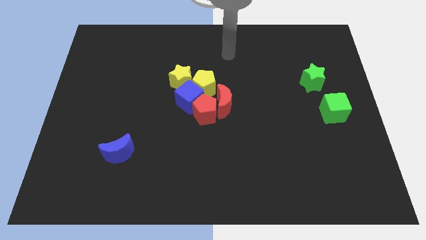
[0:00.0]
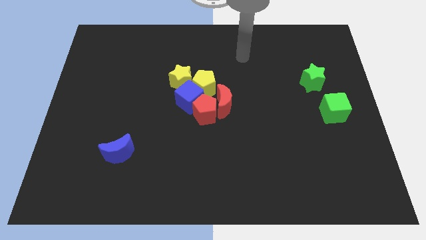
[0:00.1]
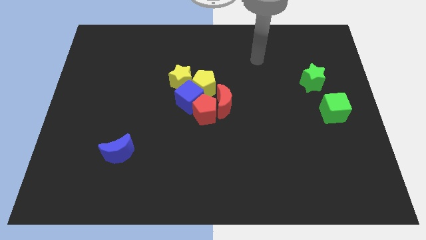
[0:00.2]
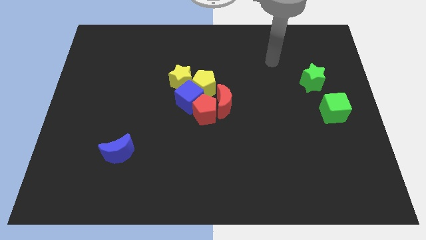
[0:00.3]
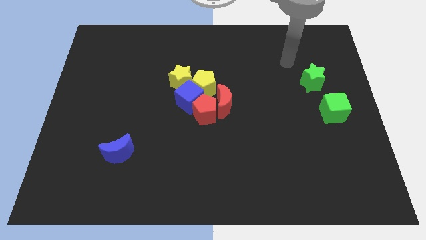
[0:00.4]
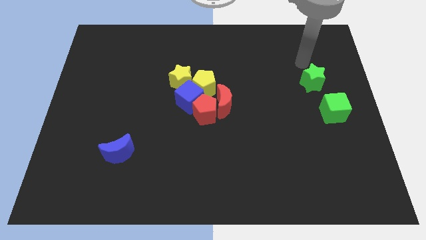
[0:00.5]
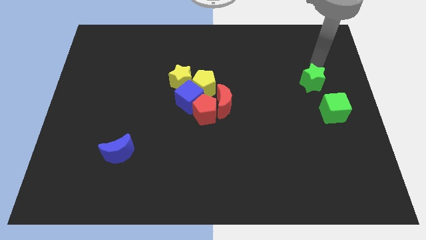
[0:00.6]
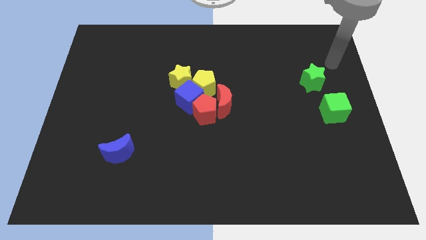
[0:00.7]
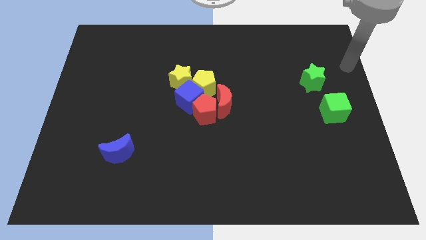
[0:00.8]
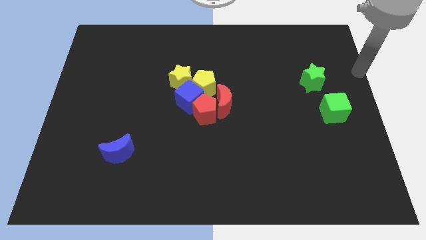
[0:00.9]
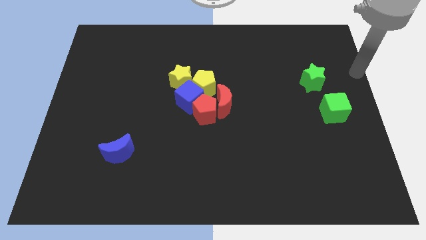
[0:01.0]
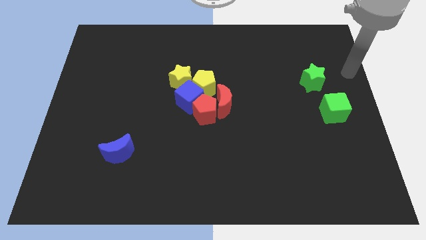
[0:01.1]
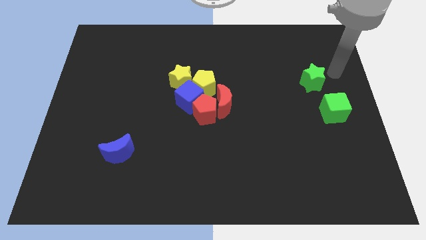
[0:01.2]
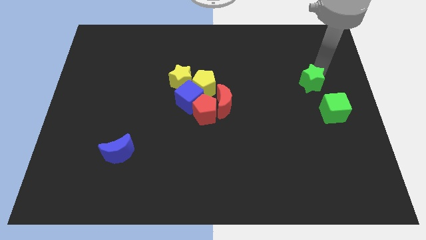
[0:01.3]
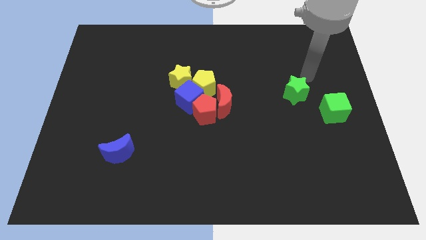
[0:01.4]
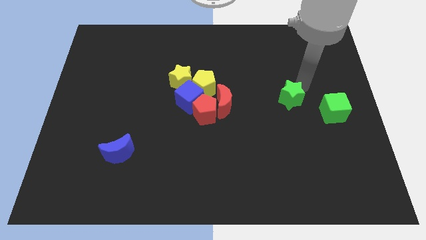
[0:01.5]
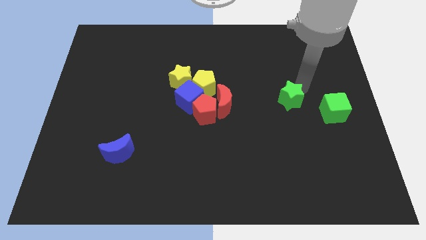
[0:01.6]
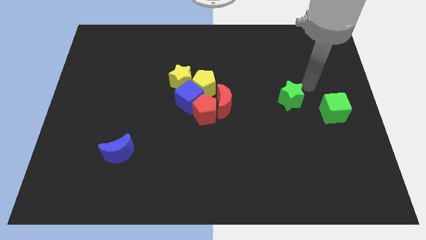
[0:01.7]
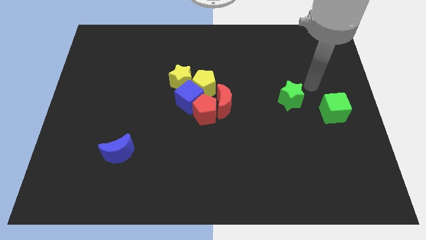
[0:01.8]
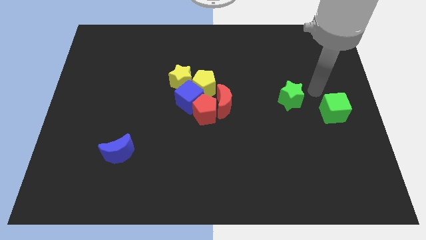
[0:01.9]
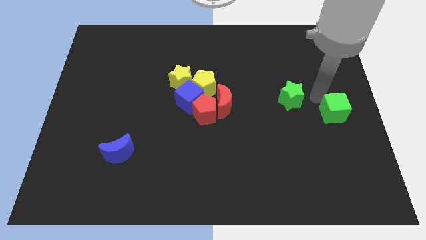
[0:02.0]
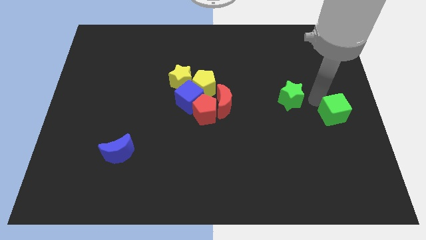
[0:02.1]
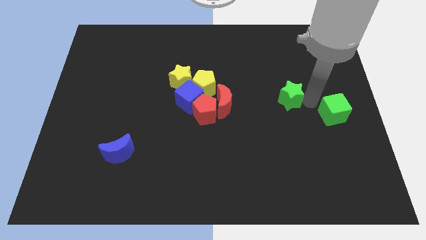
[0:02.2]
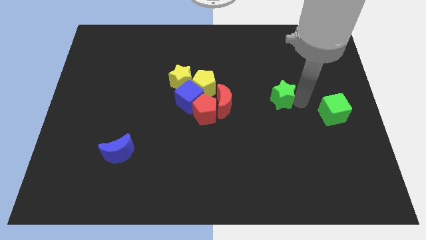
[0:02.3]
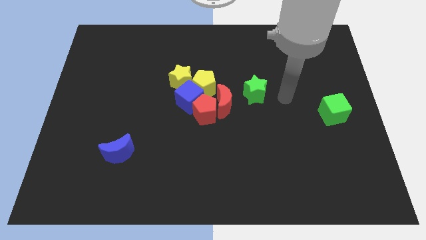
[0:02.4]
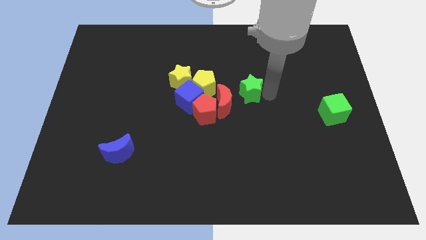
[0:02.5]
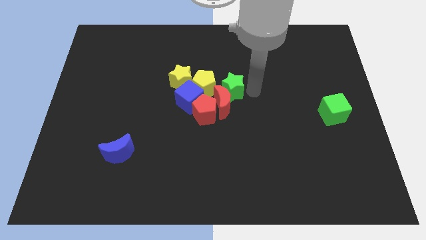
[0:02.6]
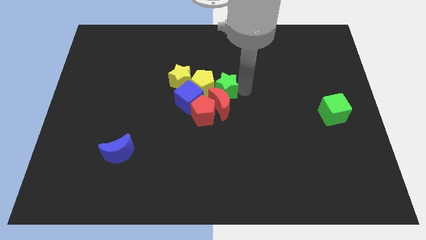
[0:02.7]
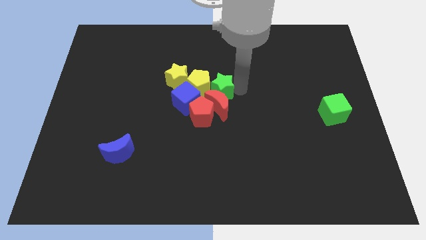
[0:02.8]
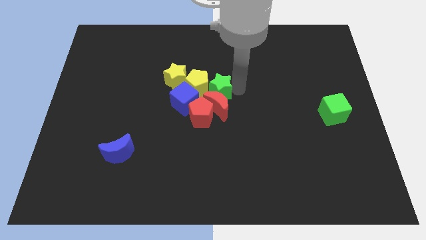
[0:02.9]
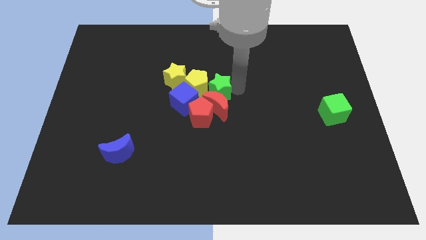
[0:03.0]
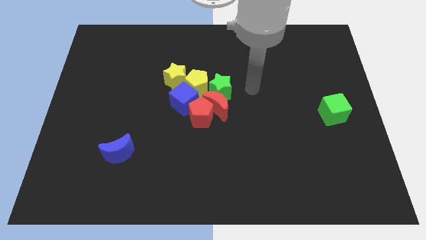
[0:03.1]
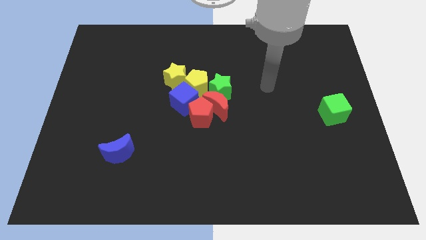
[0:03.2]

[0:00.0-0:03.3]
push the green star into the group of blocks

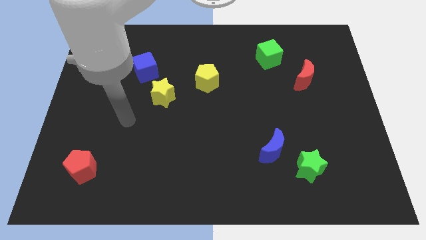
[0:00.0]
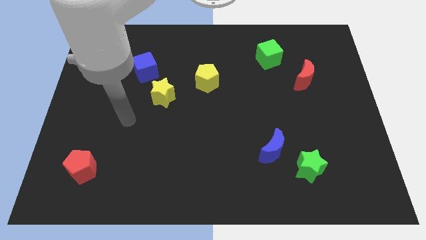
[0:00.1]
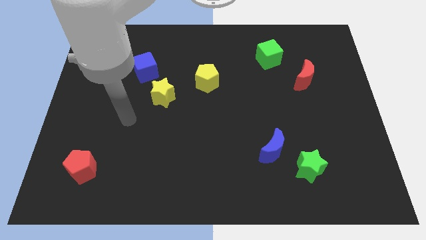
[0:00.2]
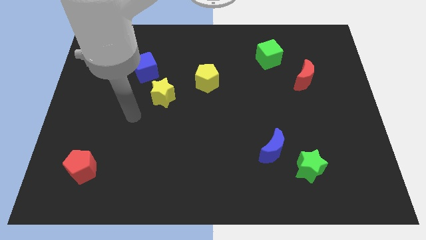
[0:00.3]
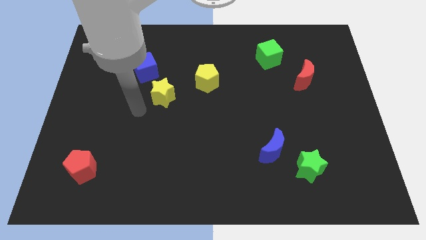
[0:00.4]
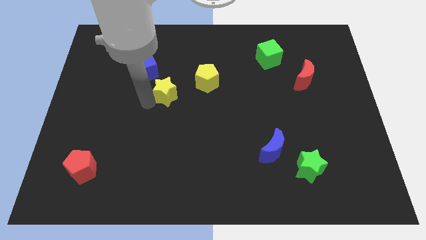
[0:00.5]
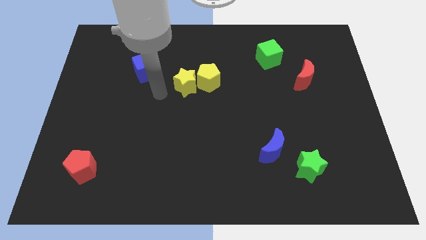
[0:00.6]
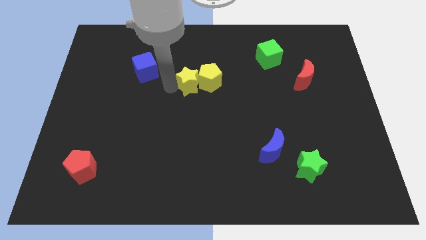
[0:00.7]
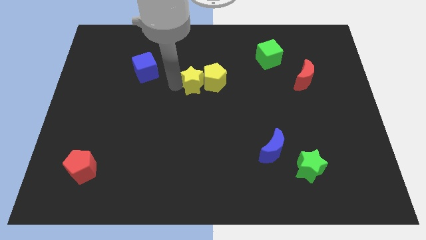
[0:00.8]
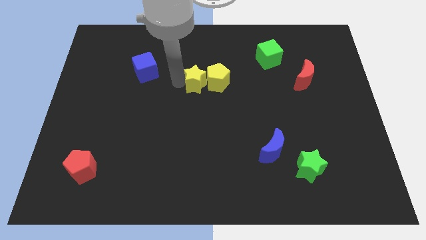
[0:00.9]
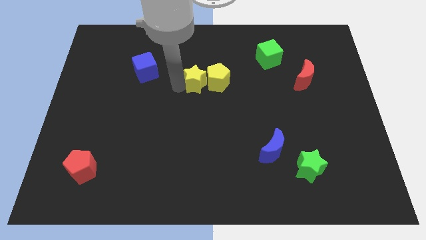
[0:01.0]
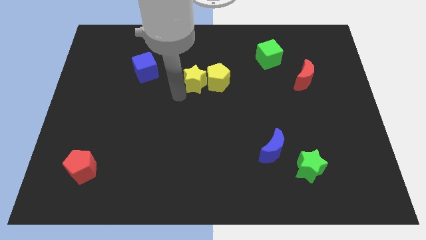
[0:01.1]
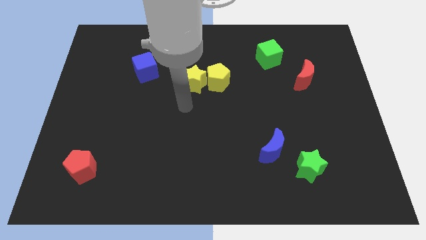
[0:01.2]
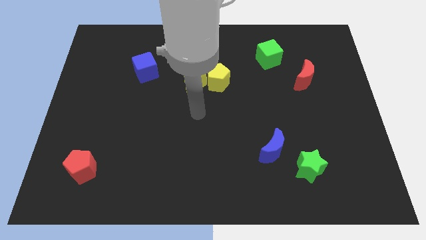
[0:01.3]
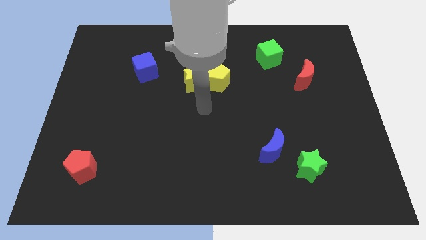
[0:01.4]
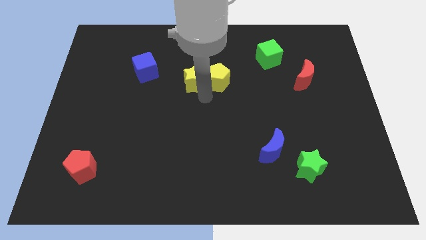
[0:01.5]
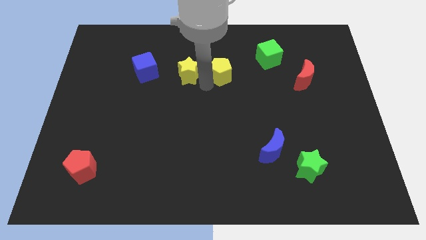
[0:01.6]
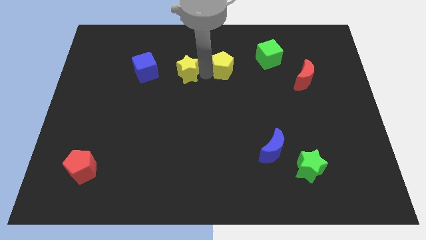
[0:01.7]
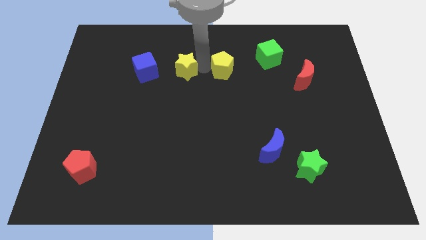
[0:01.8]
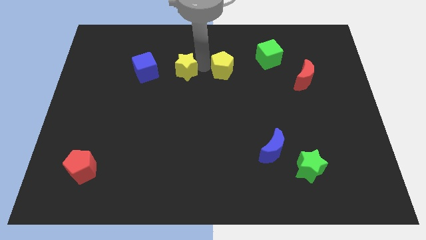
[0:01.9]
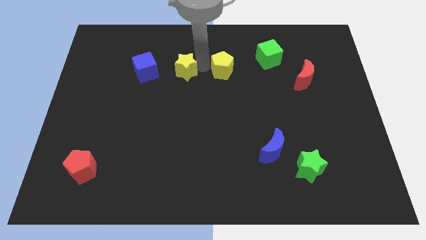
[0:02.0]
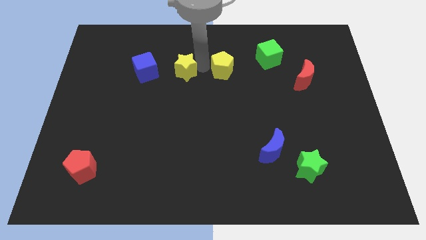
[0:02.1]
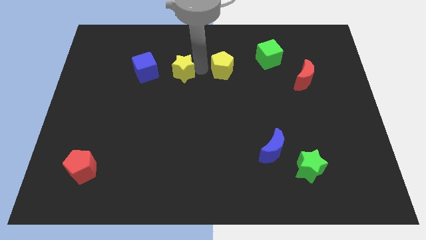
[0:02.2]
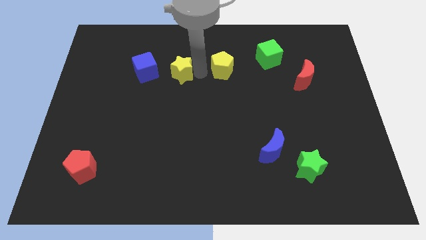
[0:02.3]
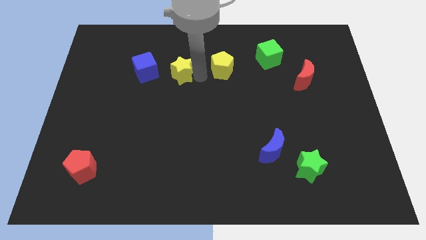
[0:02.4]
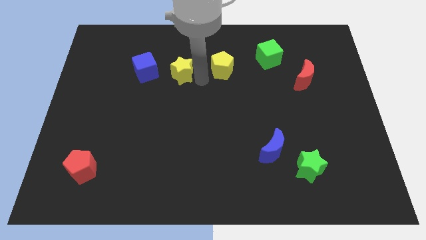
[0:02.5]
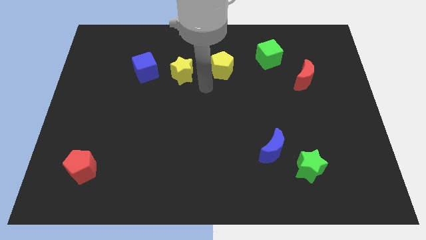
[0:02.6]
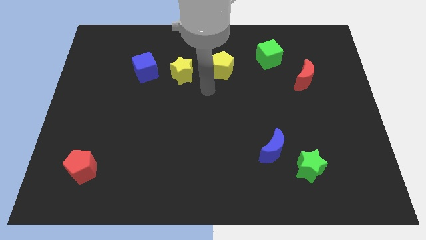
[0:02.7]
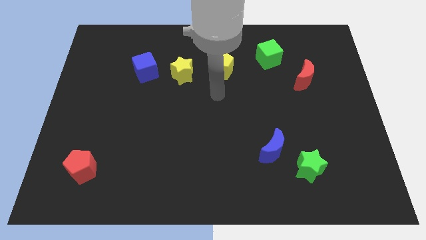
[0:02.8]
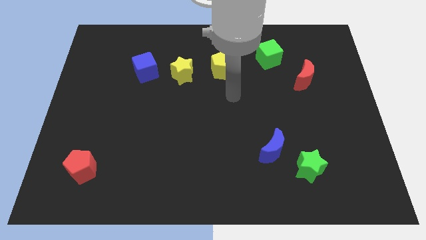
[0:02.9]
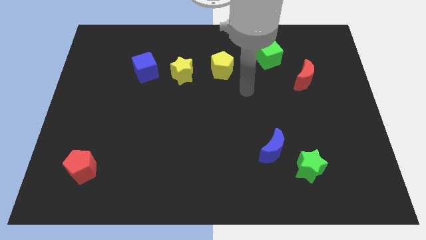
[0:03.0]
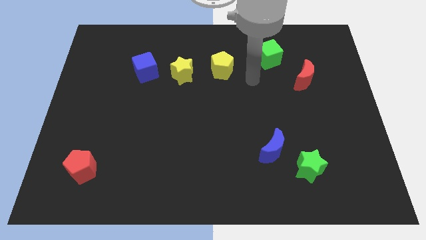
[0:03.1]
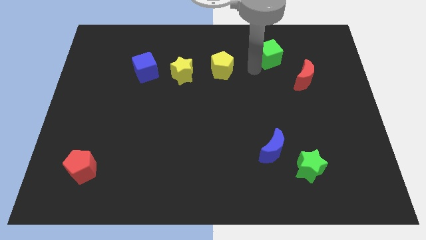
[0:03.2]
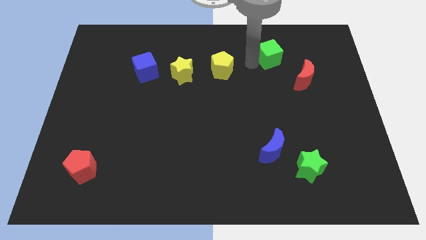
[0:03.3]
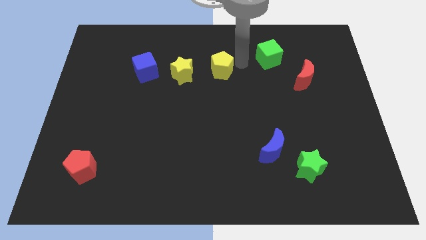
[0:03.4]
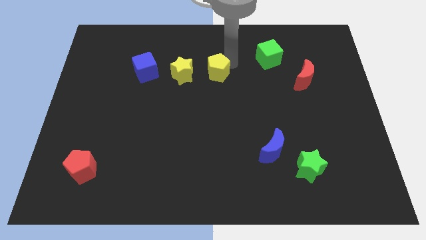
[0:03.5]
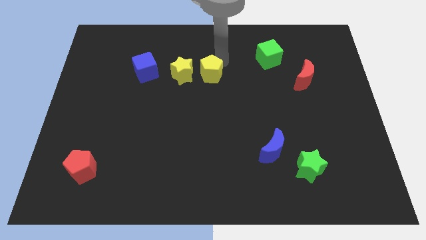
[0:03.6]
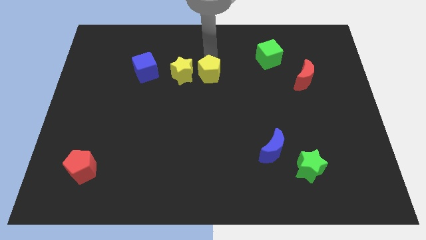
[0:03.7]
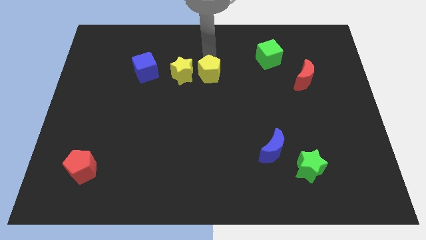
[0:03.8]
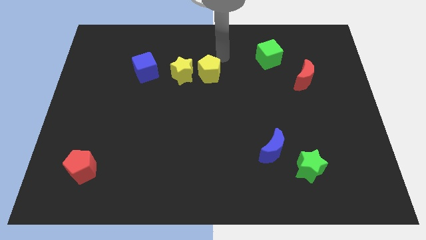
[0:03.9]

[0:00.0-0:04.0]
place yellow star and yellow pentagon to the right of blue cube

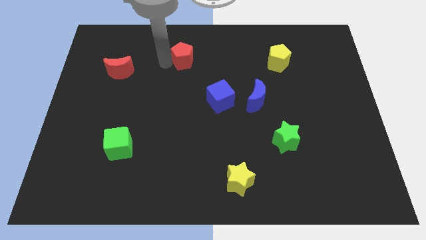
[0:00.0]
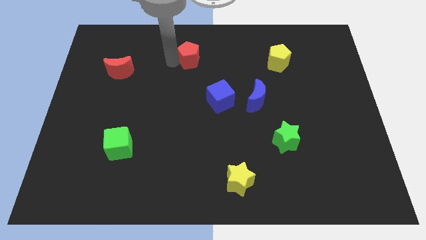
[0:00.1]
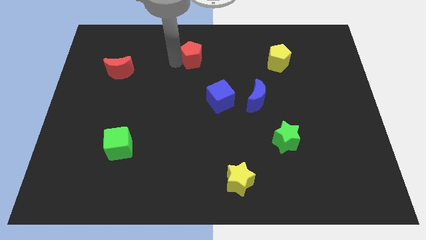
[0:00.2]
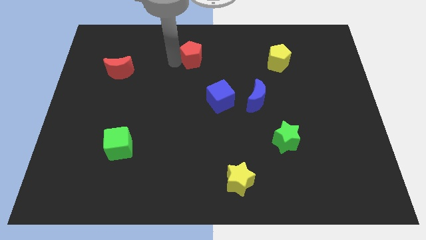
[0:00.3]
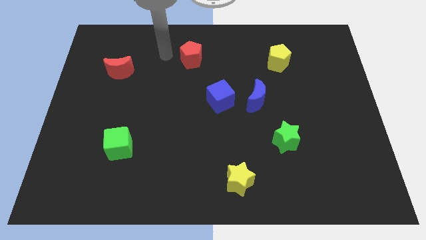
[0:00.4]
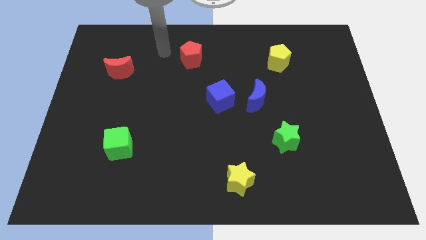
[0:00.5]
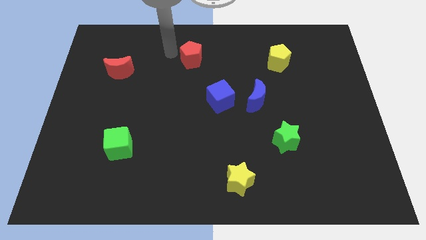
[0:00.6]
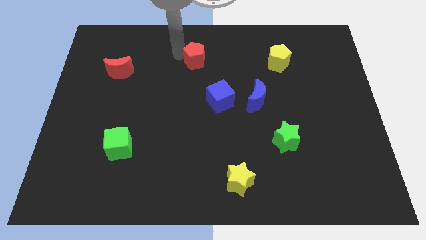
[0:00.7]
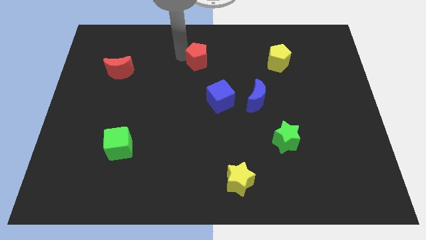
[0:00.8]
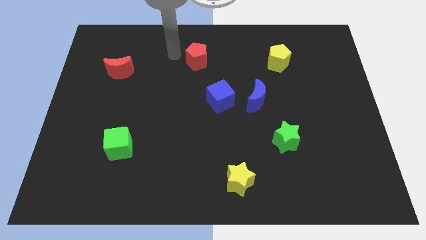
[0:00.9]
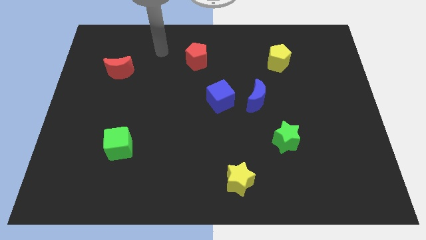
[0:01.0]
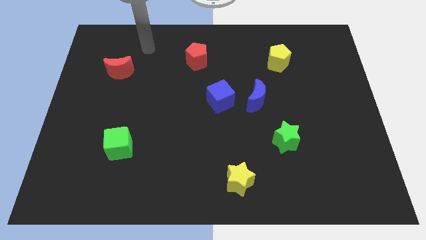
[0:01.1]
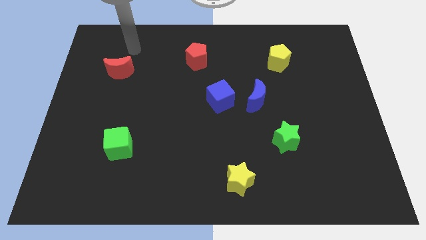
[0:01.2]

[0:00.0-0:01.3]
move the red pentagon to the right side of the board

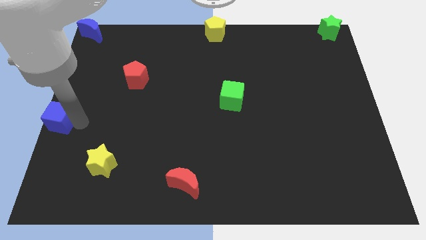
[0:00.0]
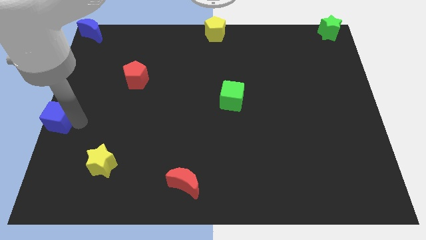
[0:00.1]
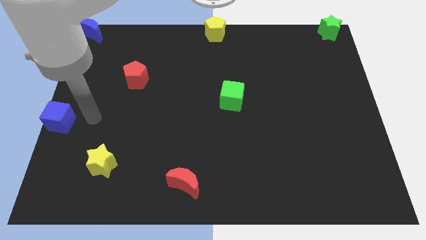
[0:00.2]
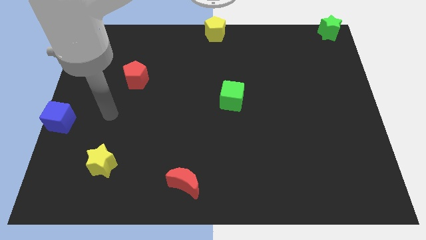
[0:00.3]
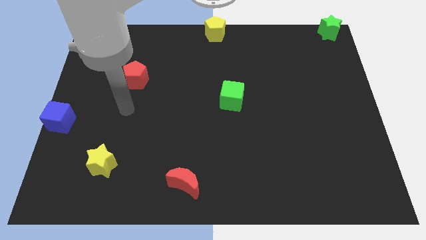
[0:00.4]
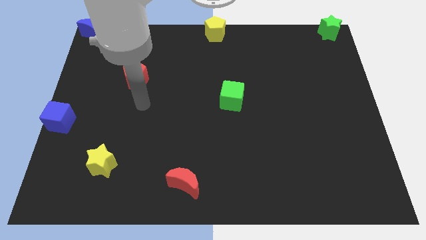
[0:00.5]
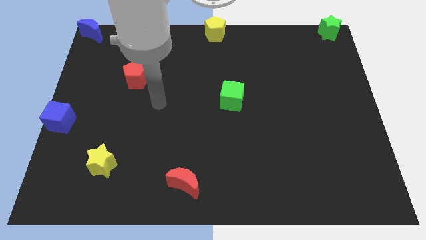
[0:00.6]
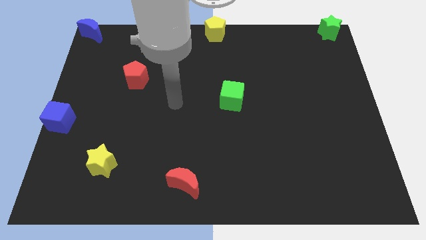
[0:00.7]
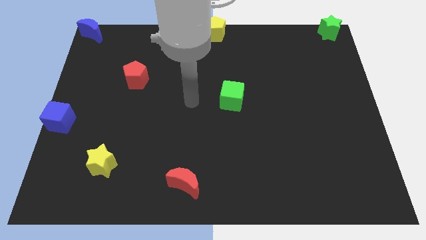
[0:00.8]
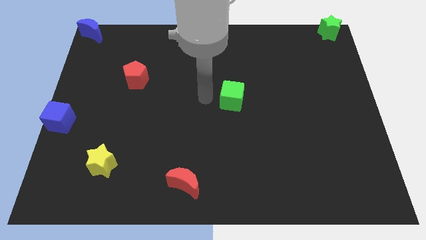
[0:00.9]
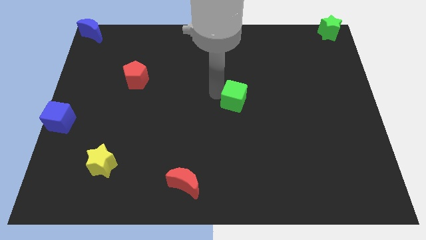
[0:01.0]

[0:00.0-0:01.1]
move the arm away from blue cube
